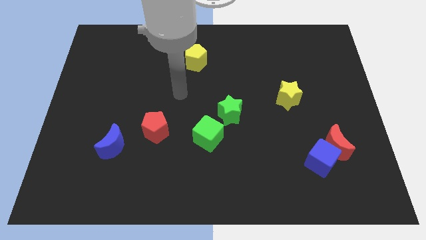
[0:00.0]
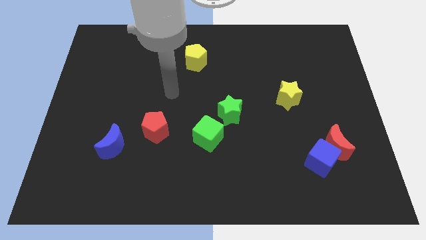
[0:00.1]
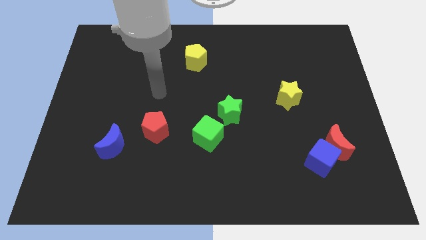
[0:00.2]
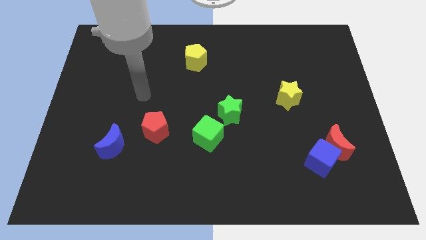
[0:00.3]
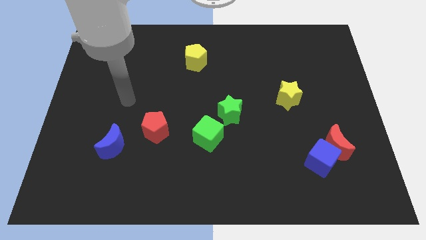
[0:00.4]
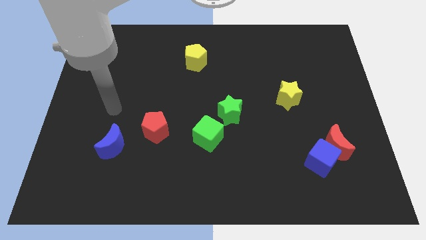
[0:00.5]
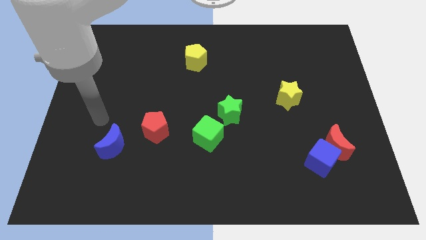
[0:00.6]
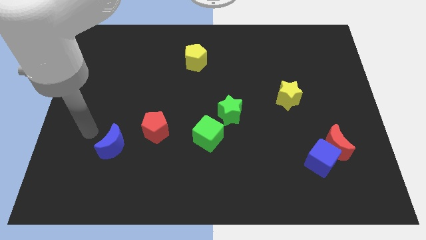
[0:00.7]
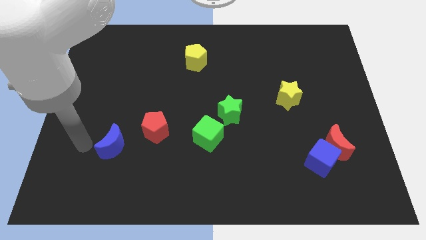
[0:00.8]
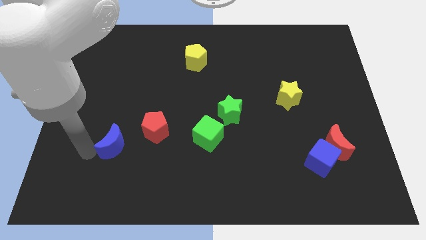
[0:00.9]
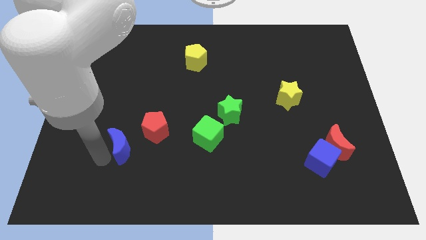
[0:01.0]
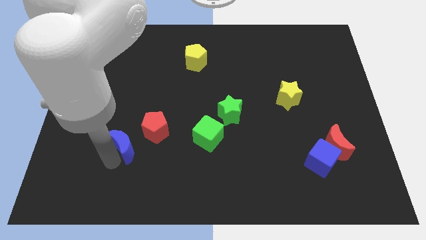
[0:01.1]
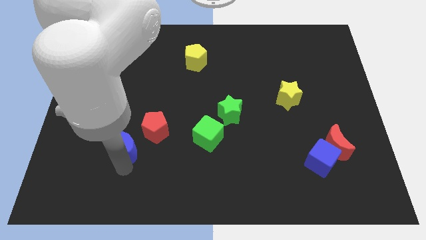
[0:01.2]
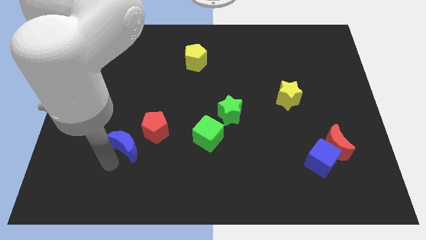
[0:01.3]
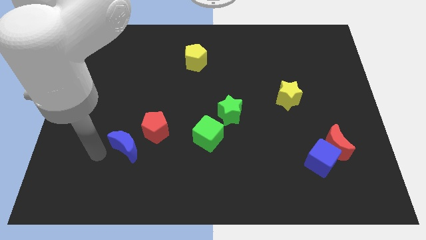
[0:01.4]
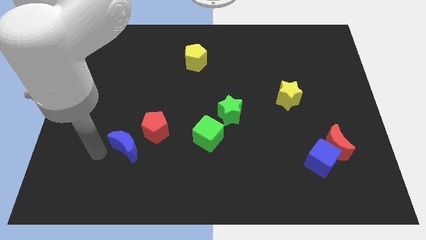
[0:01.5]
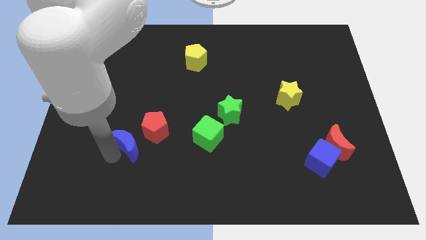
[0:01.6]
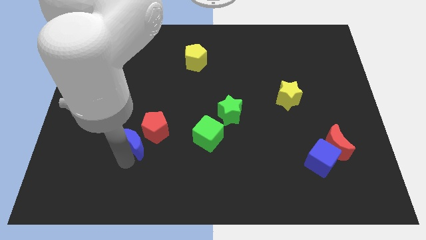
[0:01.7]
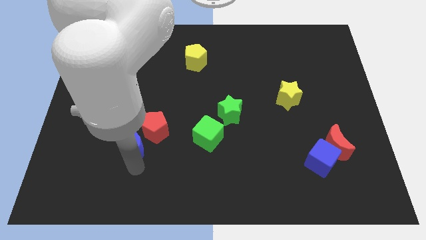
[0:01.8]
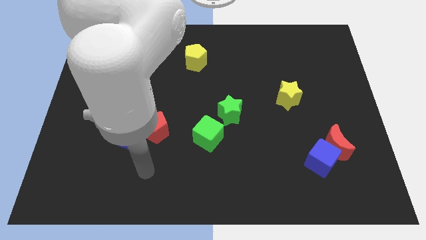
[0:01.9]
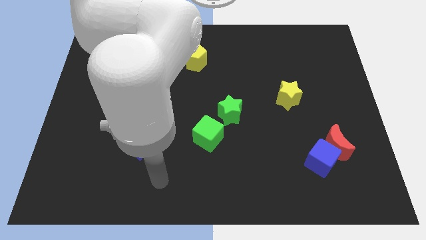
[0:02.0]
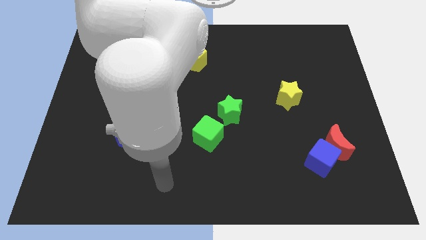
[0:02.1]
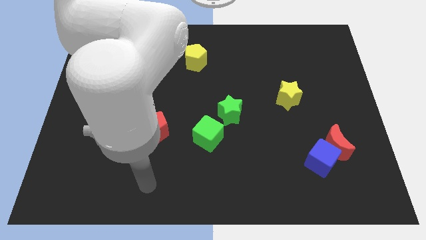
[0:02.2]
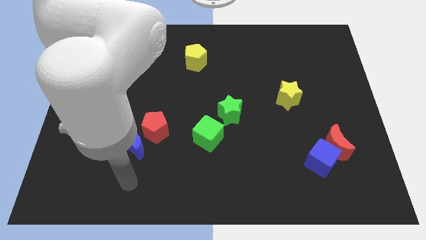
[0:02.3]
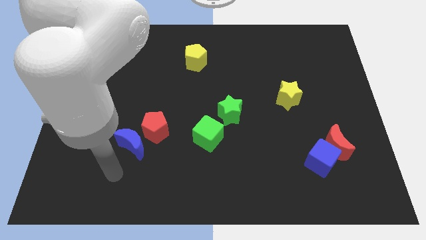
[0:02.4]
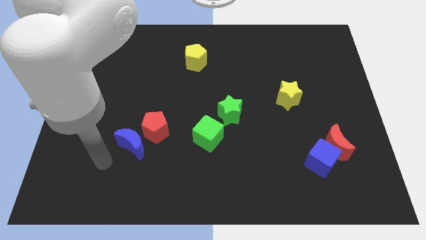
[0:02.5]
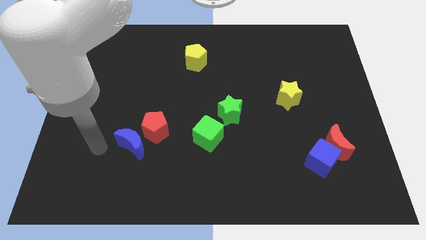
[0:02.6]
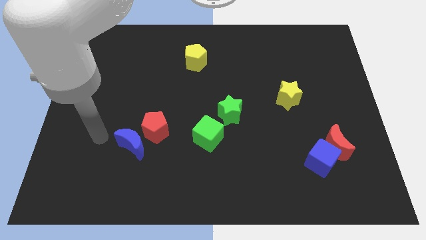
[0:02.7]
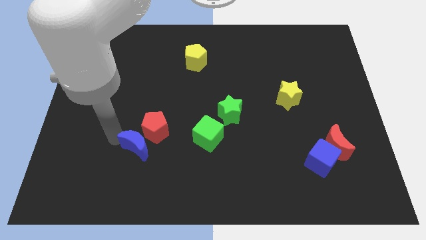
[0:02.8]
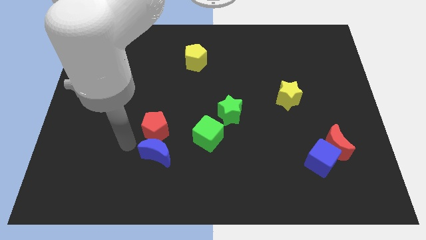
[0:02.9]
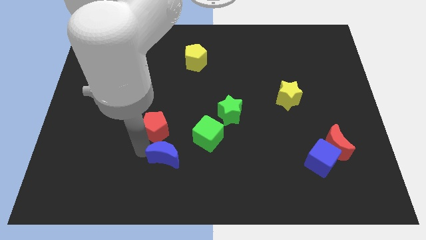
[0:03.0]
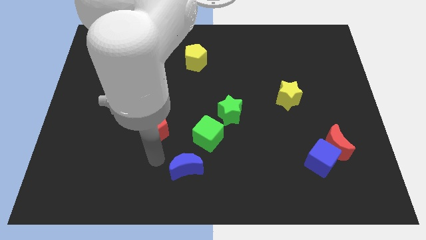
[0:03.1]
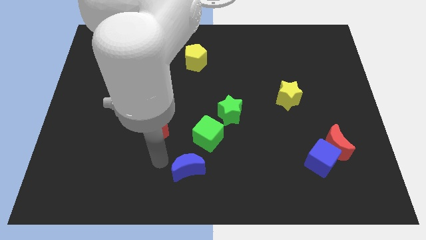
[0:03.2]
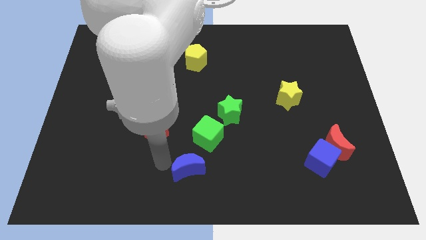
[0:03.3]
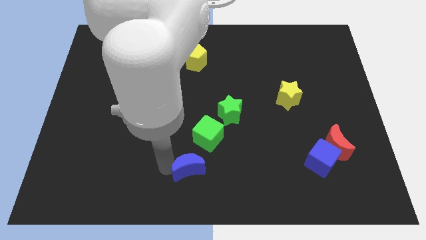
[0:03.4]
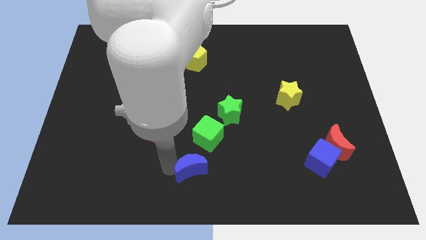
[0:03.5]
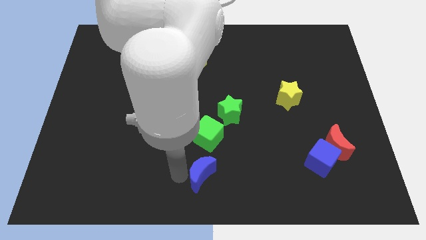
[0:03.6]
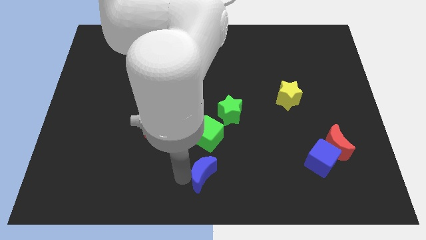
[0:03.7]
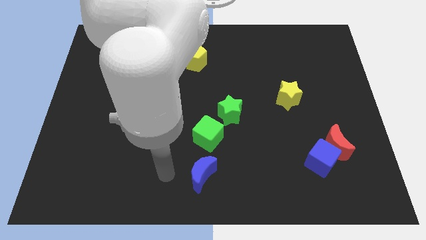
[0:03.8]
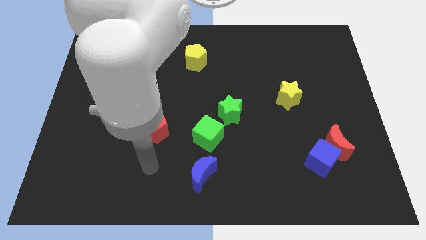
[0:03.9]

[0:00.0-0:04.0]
place blue moon to the bottom of the green cube

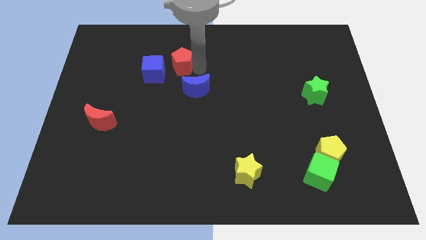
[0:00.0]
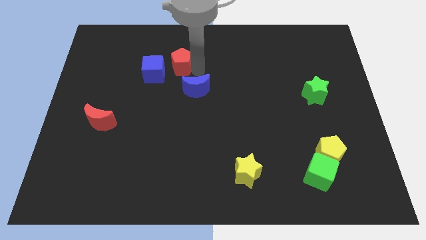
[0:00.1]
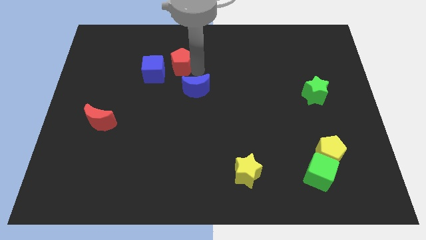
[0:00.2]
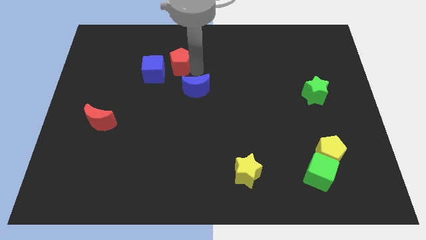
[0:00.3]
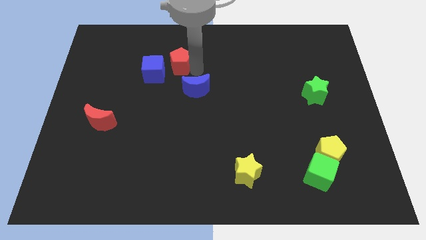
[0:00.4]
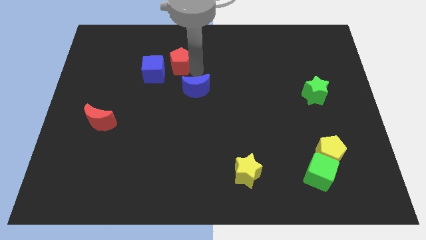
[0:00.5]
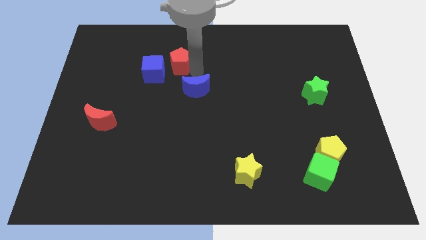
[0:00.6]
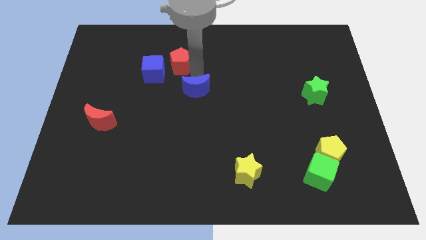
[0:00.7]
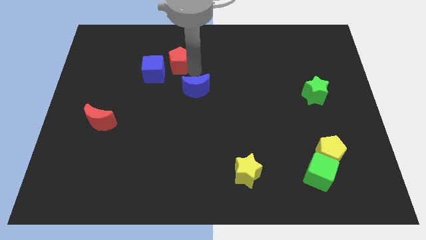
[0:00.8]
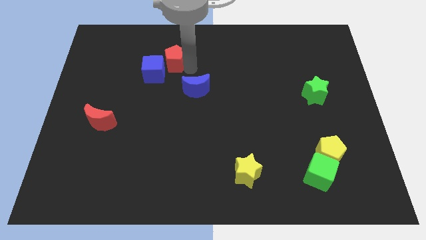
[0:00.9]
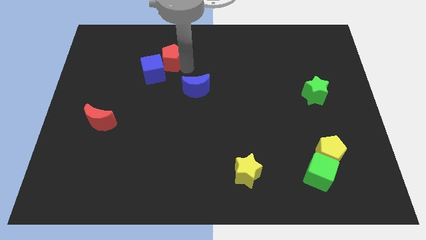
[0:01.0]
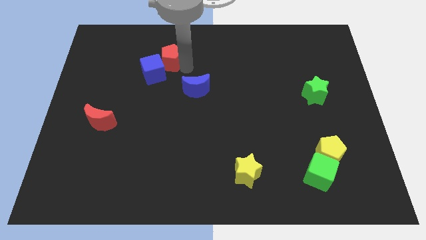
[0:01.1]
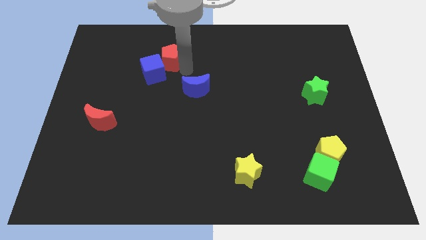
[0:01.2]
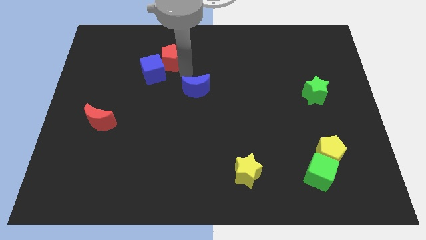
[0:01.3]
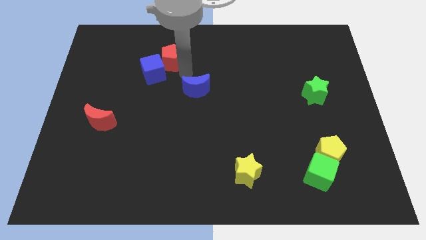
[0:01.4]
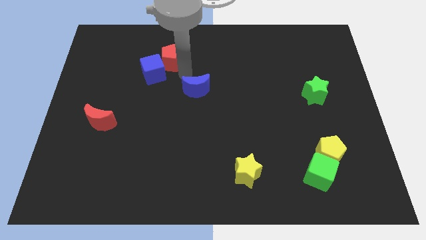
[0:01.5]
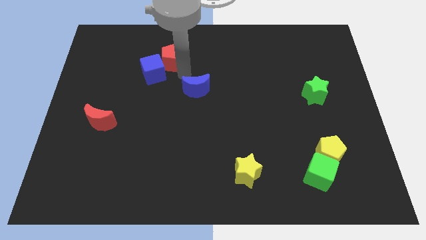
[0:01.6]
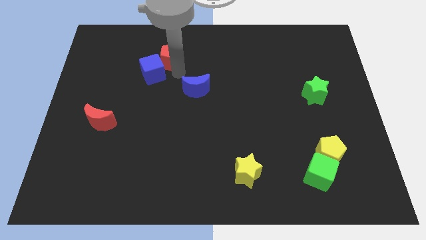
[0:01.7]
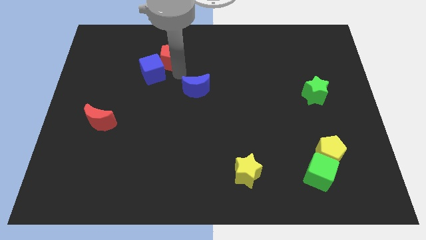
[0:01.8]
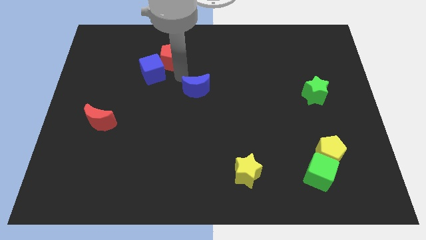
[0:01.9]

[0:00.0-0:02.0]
push the red pentagon diagonally to the blue cube

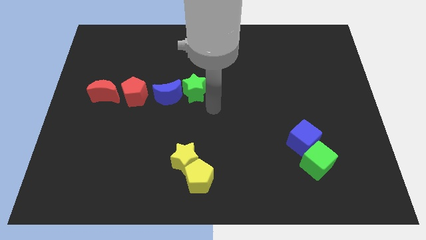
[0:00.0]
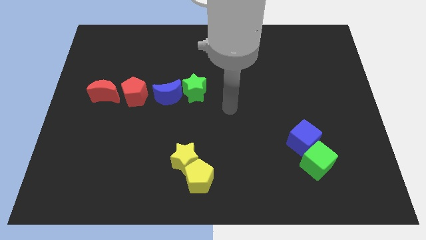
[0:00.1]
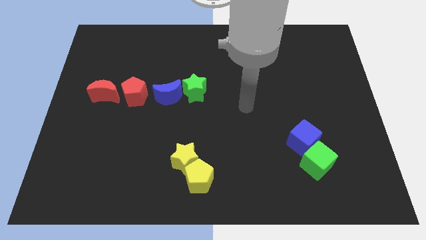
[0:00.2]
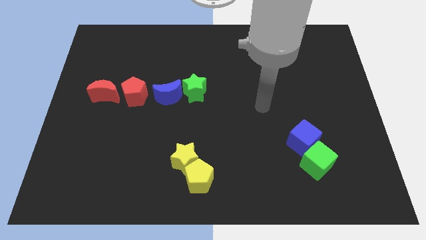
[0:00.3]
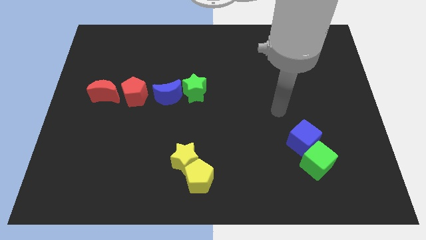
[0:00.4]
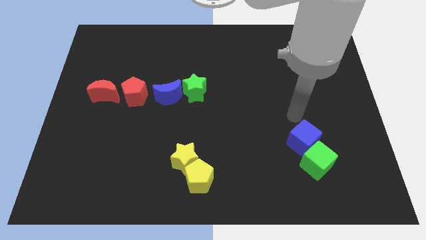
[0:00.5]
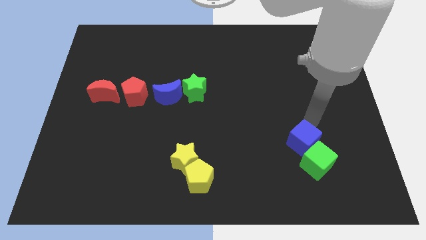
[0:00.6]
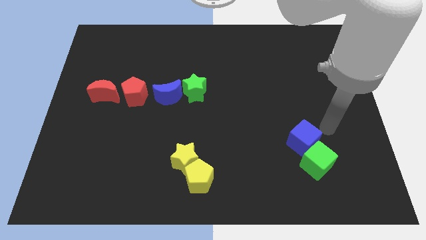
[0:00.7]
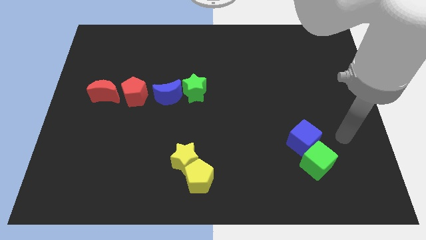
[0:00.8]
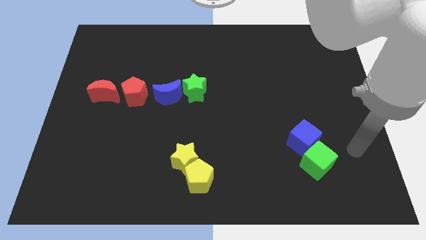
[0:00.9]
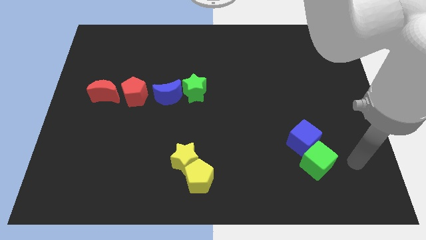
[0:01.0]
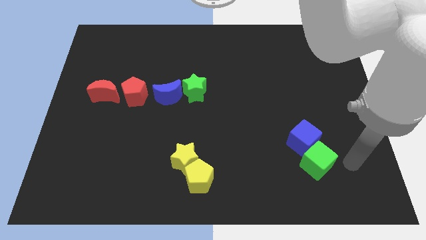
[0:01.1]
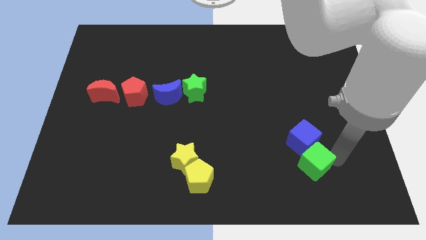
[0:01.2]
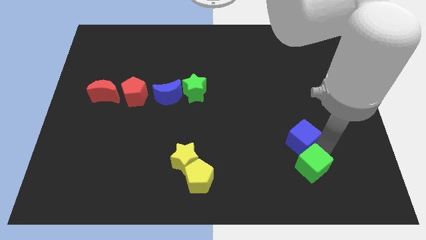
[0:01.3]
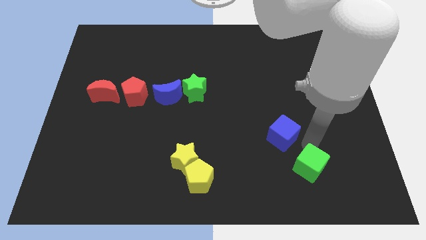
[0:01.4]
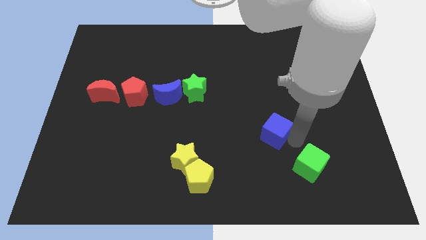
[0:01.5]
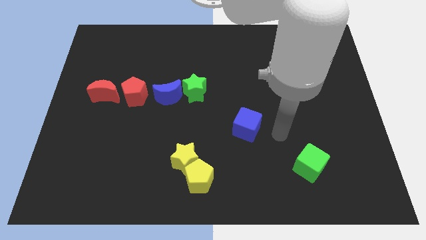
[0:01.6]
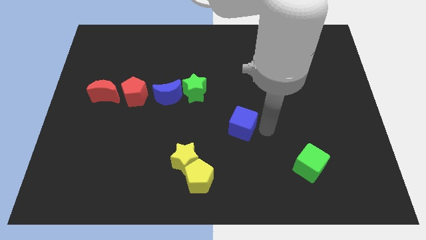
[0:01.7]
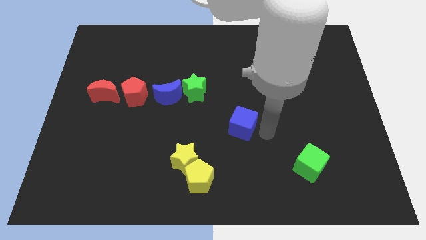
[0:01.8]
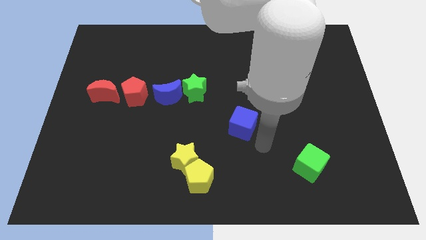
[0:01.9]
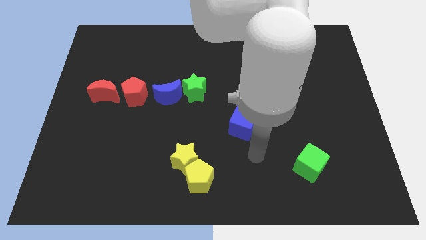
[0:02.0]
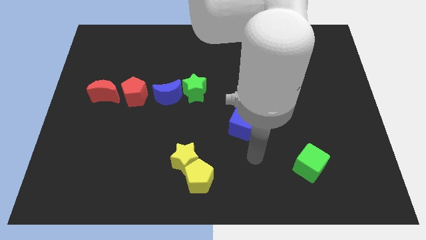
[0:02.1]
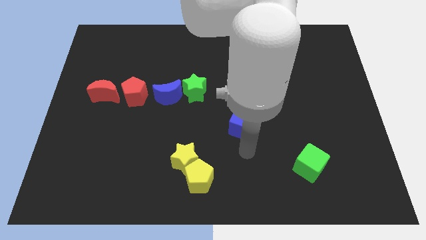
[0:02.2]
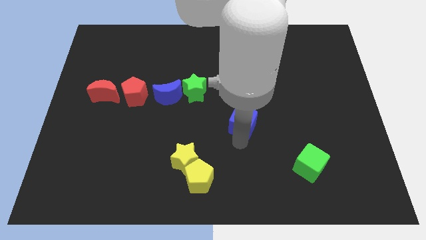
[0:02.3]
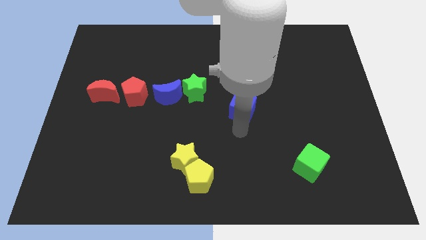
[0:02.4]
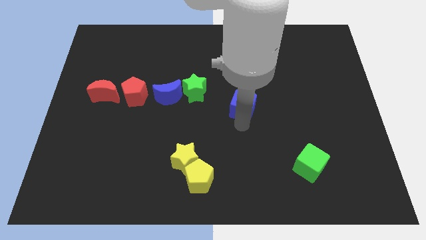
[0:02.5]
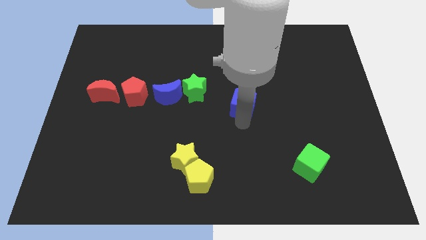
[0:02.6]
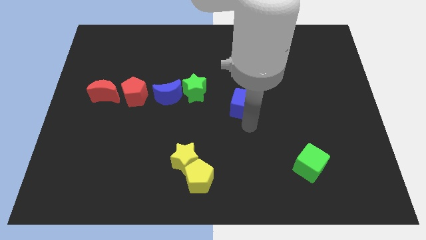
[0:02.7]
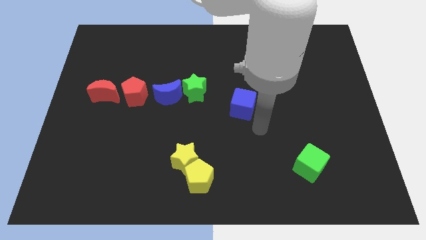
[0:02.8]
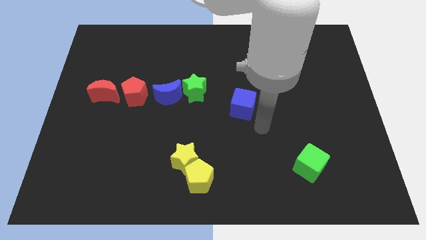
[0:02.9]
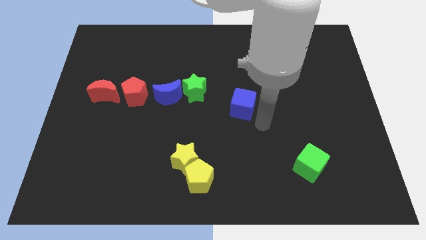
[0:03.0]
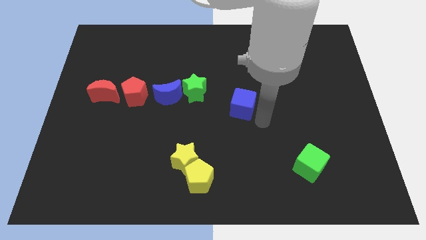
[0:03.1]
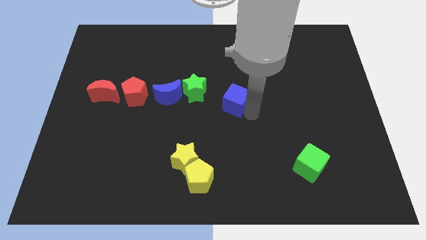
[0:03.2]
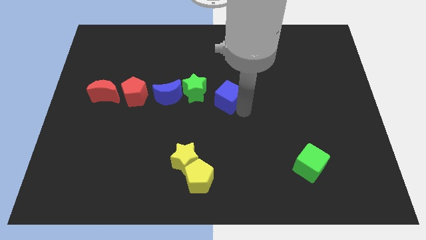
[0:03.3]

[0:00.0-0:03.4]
separate green cube and blue cube
